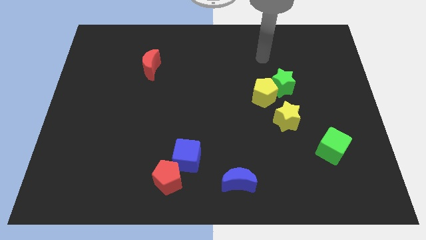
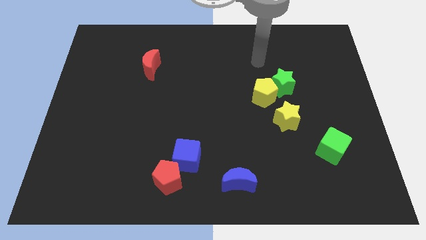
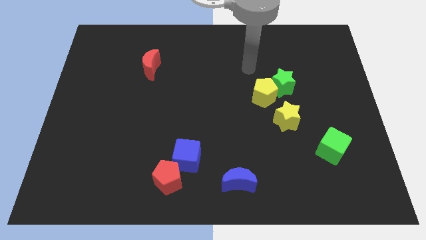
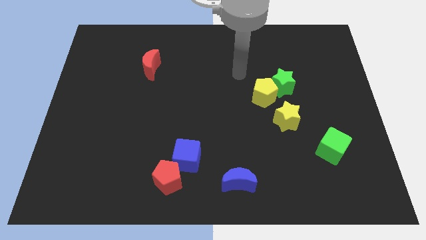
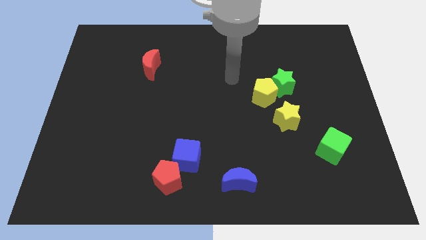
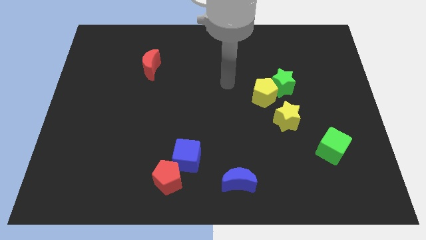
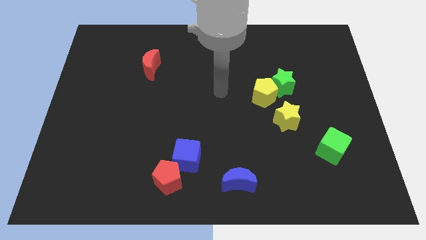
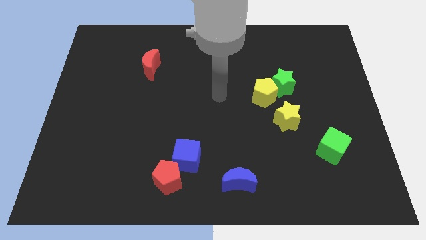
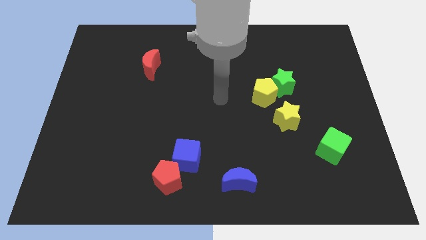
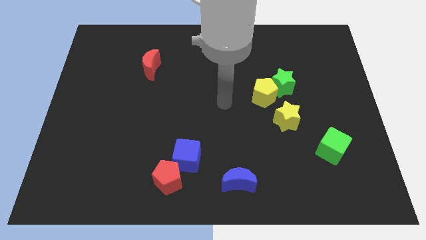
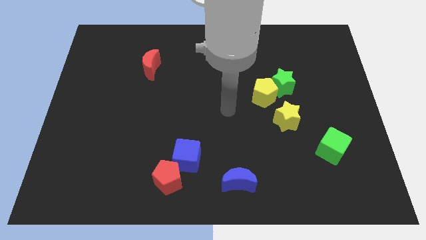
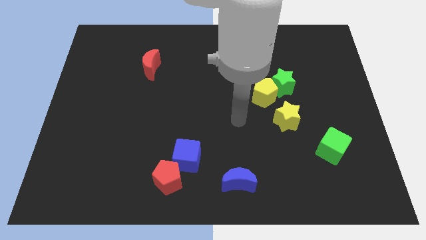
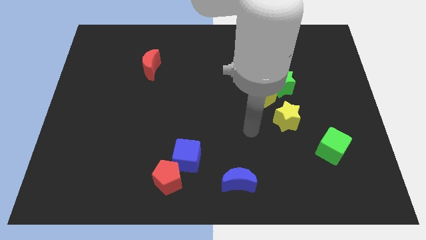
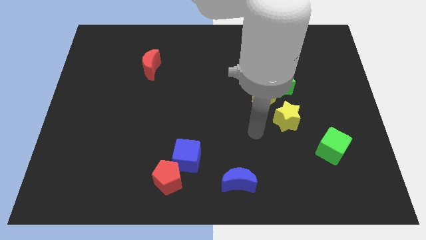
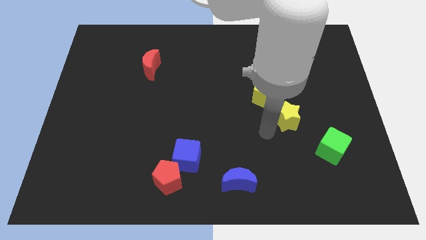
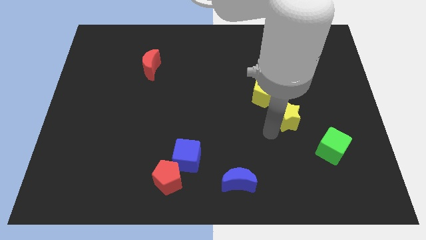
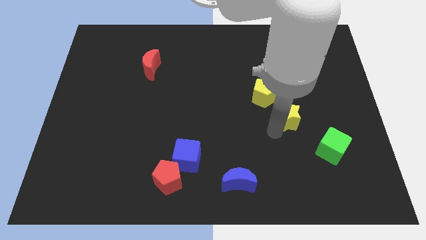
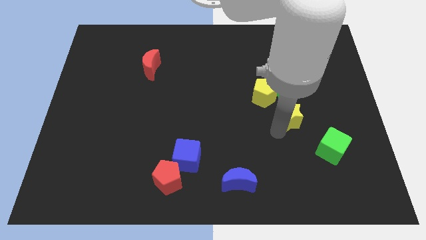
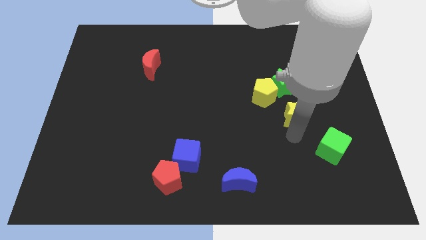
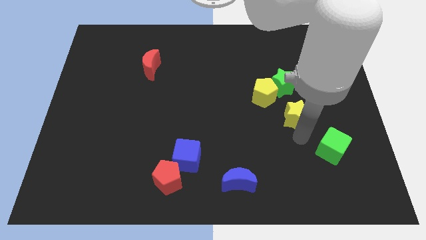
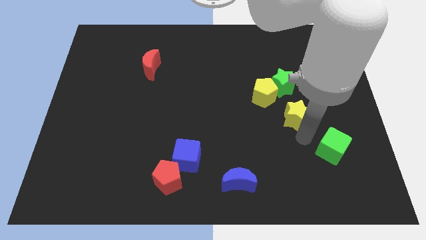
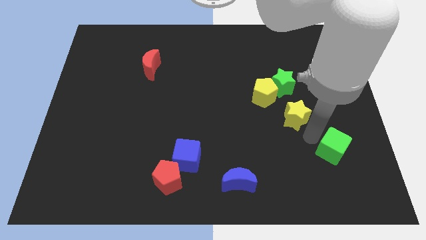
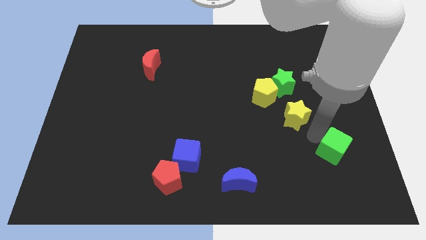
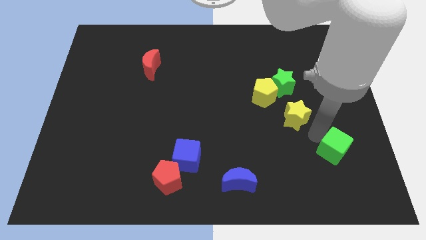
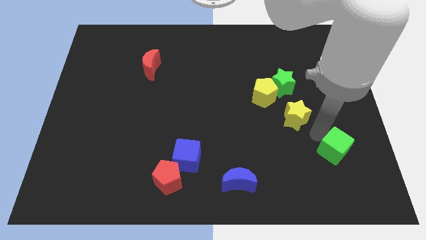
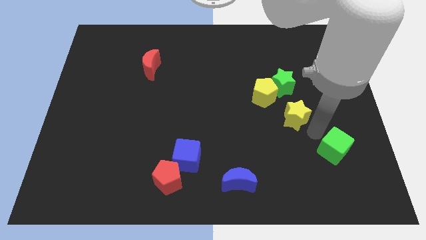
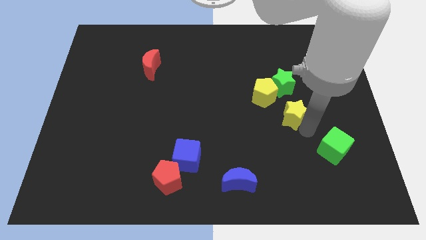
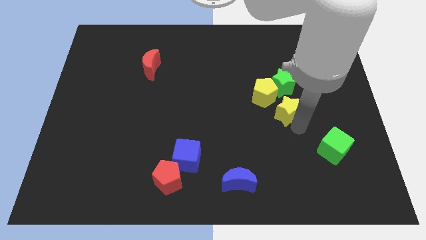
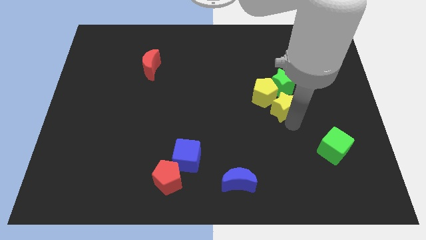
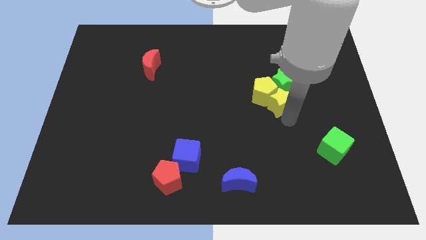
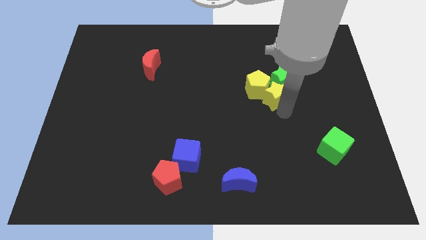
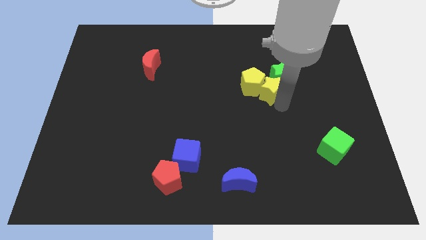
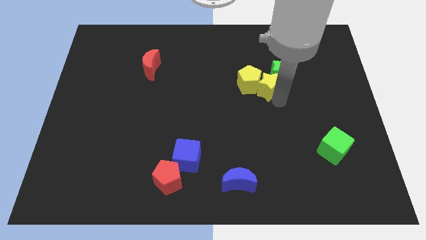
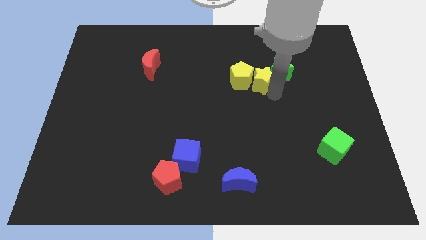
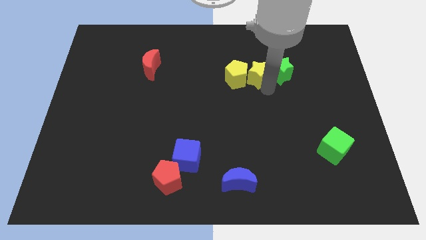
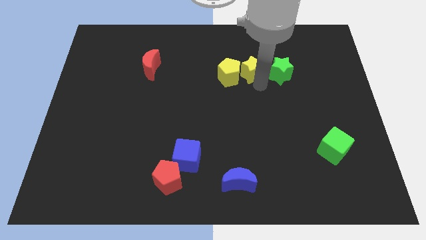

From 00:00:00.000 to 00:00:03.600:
place the yellow star in between yellow pentagon and green star

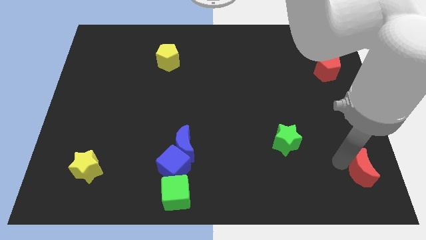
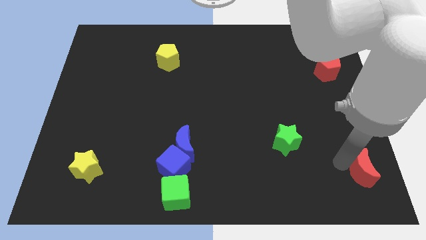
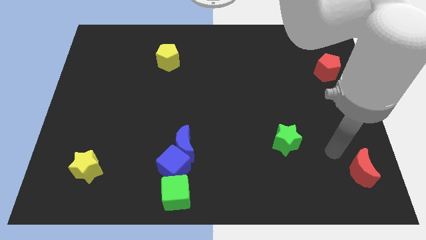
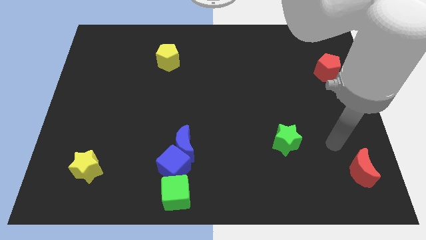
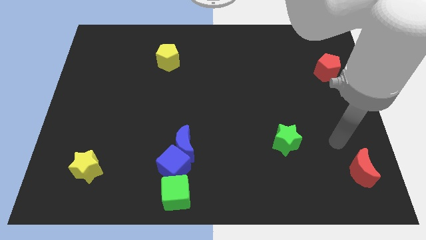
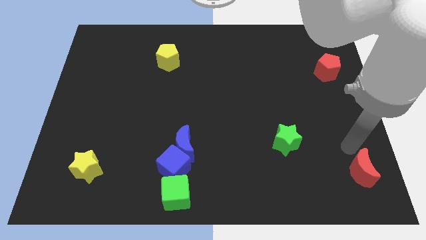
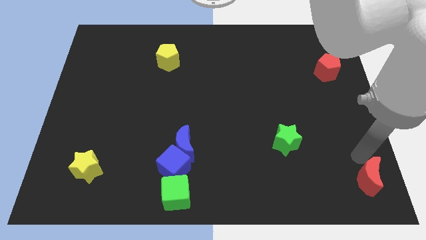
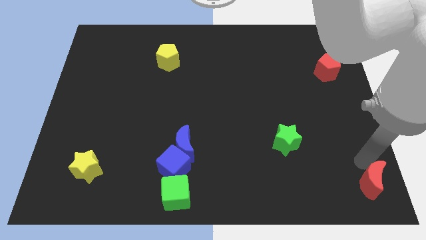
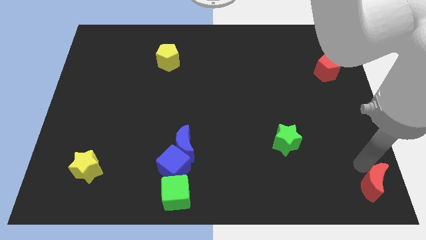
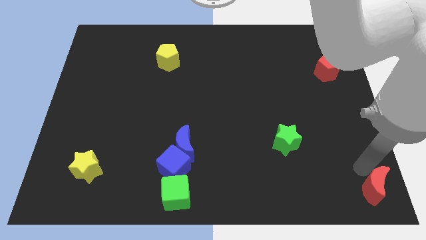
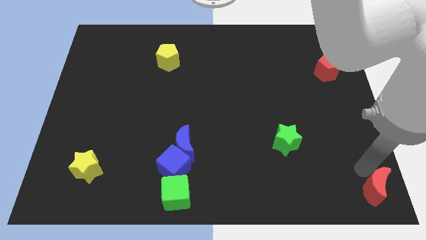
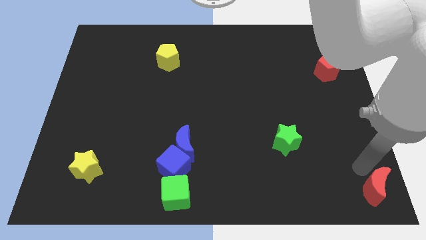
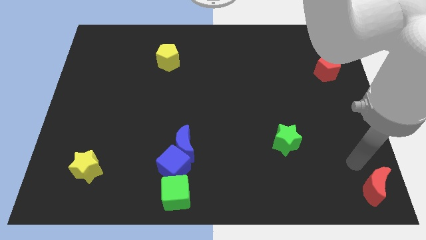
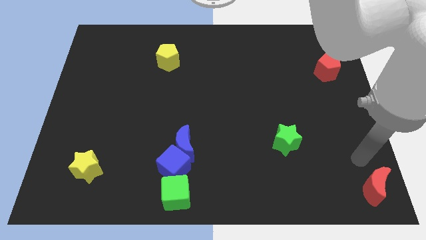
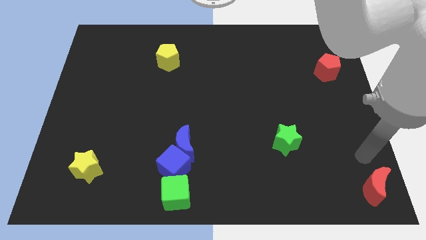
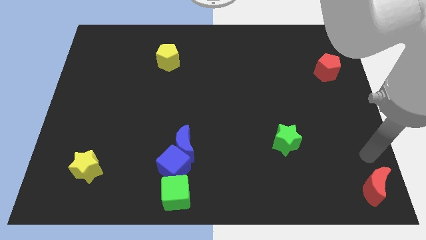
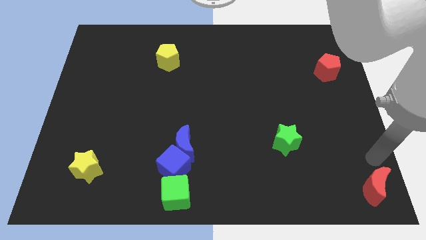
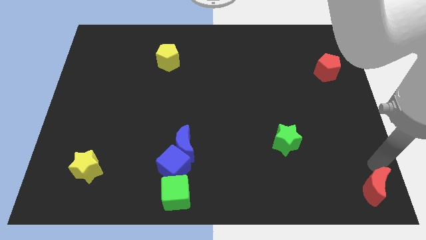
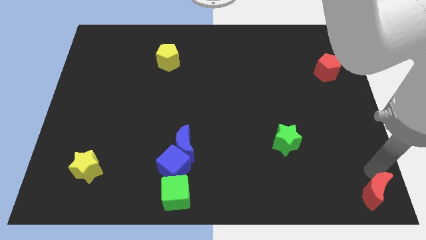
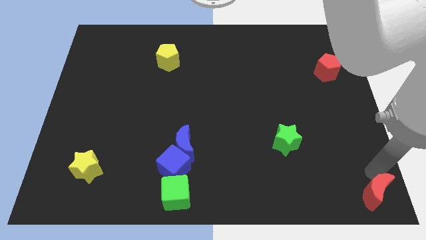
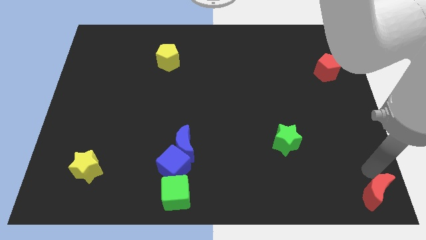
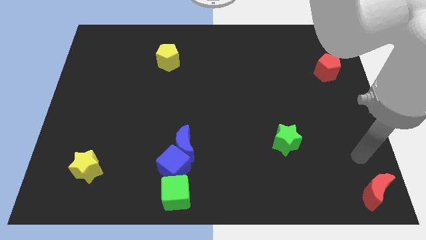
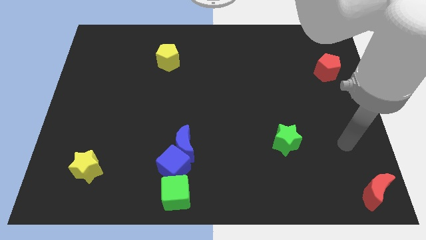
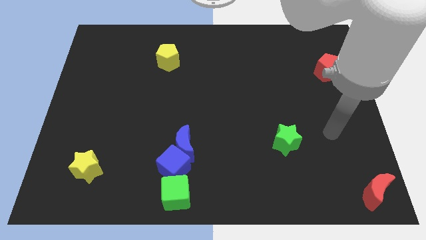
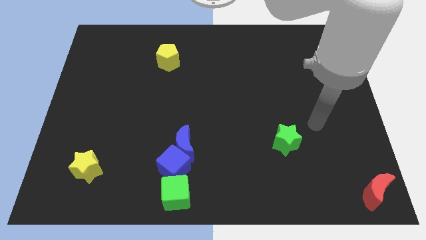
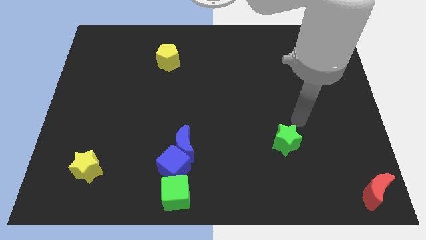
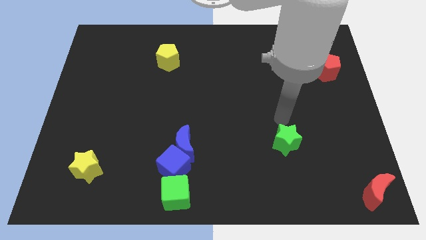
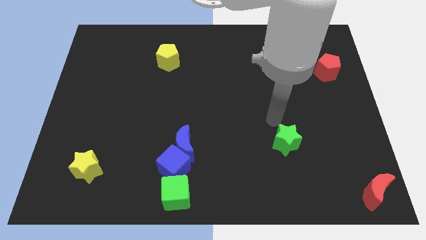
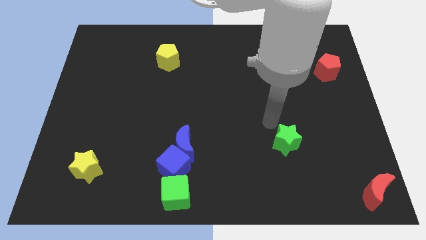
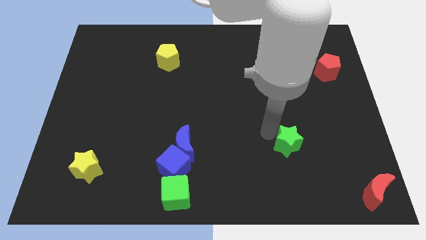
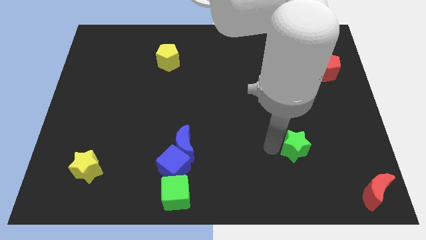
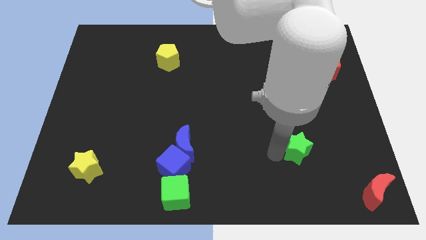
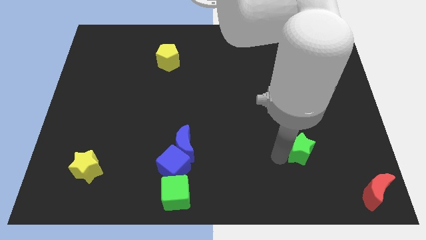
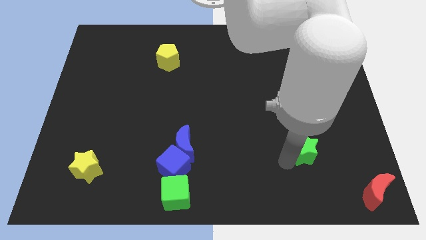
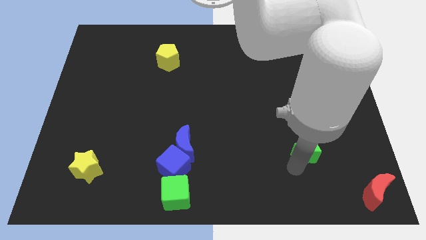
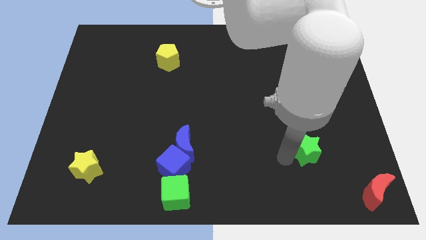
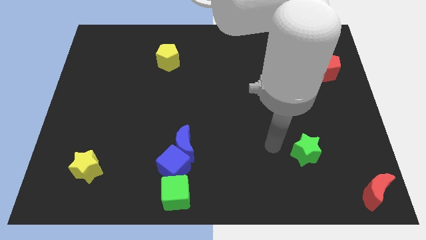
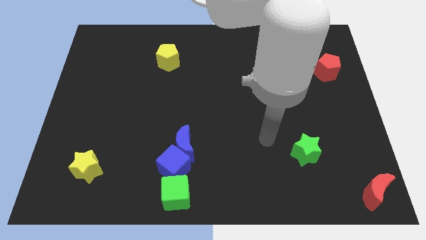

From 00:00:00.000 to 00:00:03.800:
move the green star towards the red moon

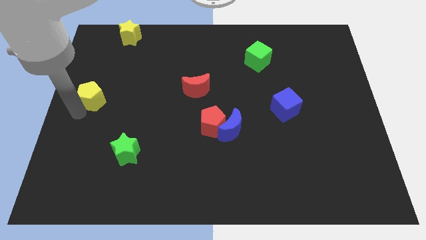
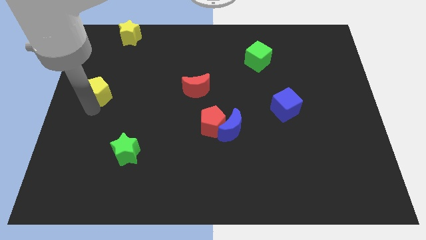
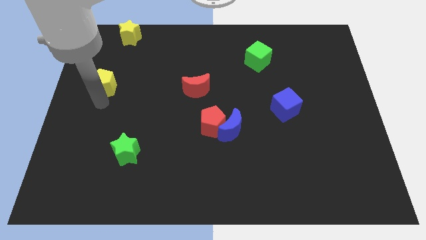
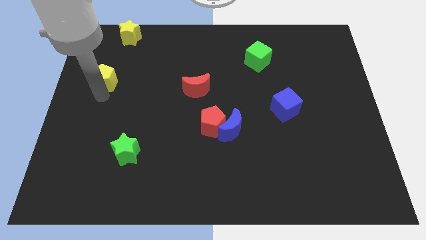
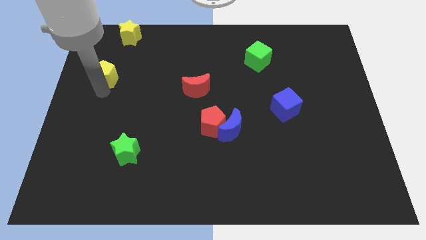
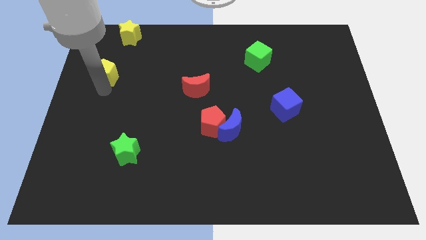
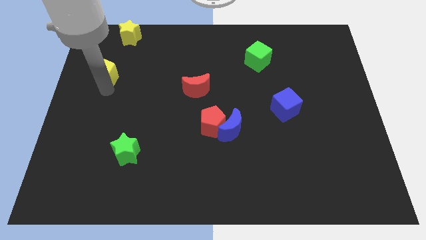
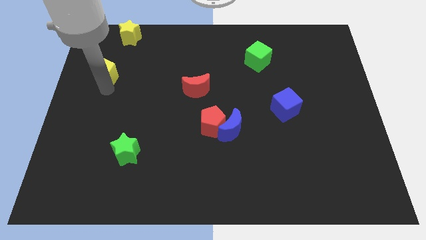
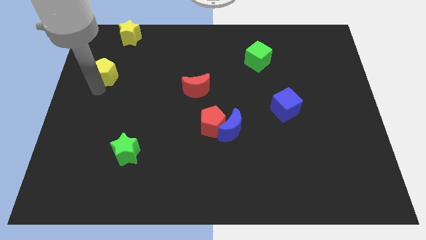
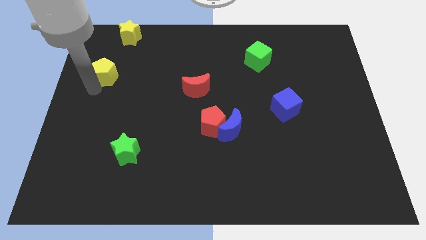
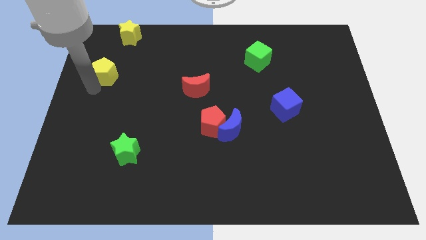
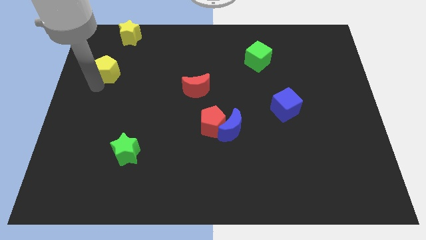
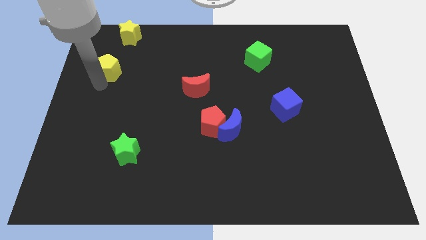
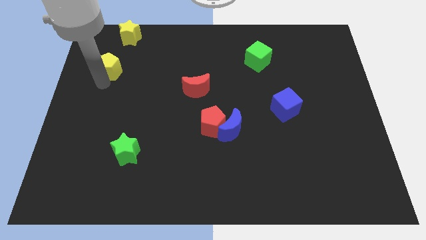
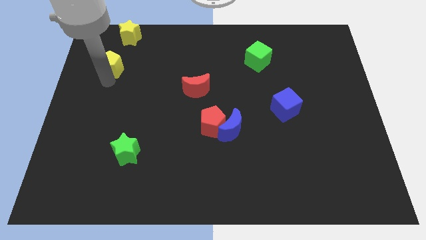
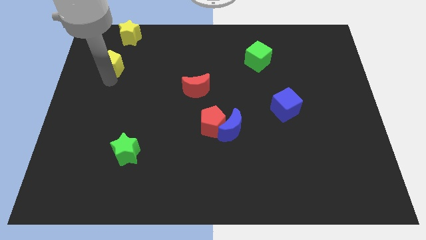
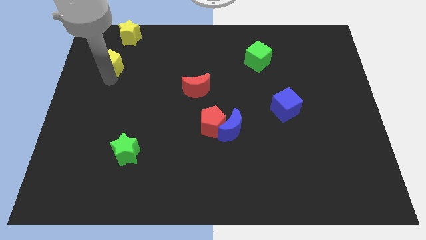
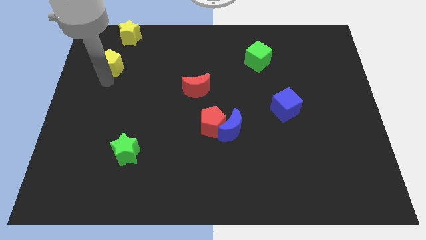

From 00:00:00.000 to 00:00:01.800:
push the yellow pentagon closer to the yellow star
